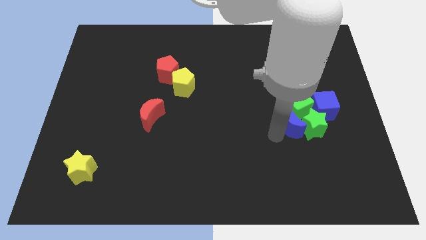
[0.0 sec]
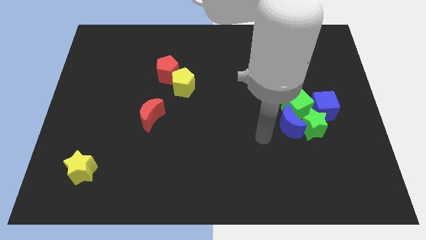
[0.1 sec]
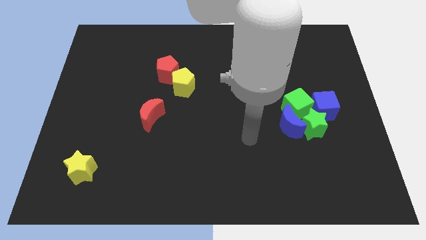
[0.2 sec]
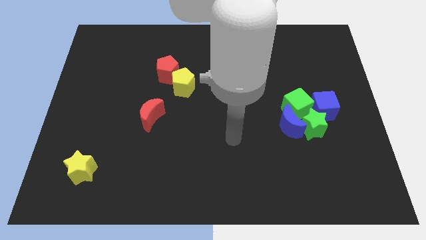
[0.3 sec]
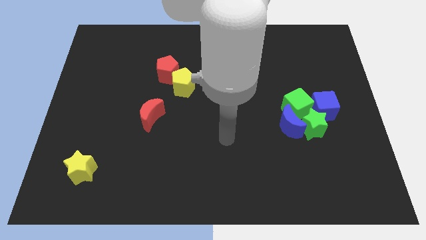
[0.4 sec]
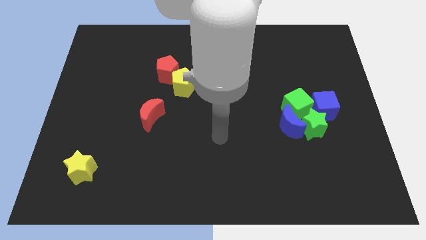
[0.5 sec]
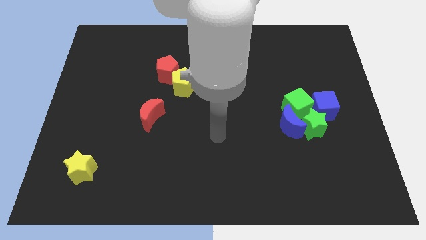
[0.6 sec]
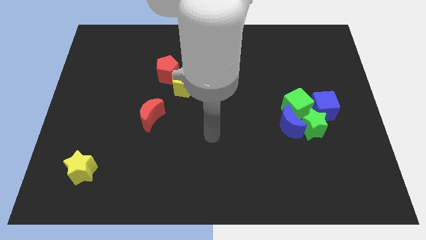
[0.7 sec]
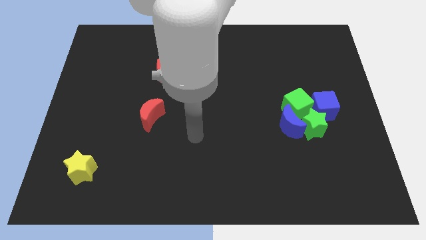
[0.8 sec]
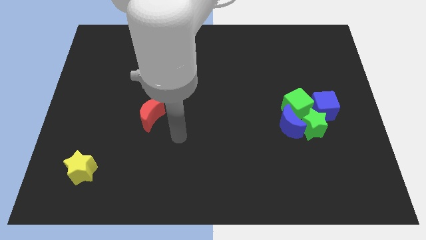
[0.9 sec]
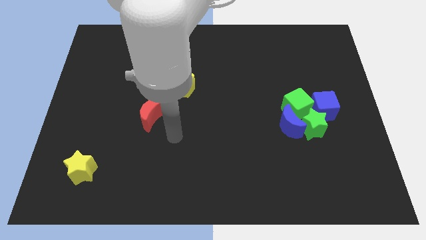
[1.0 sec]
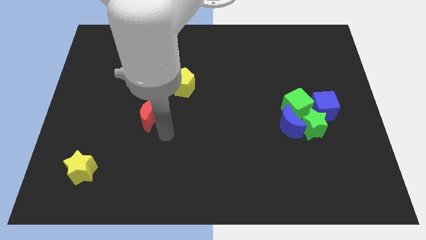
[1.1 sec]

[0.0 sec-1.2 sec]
move your arm towards the left side of the board

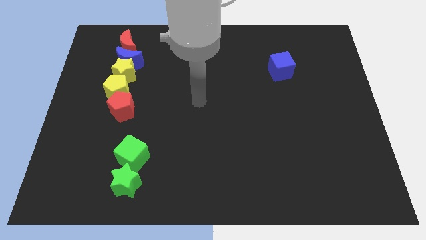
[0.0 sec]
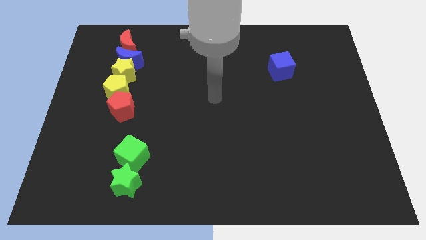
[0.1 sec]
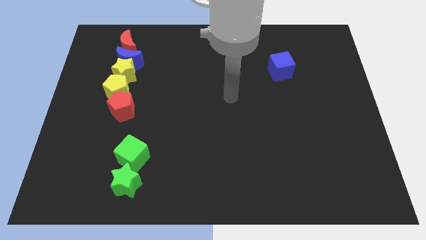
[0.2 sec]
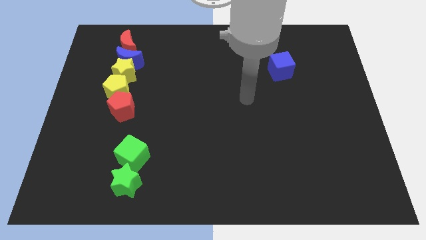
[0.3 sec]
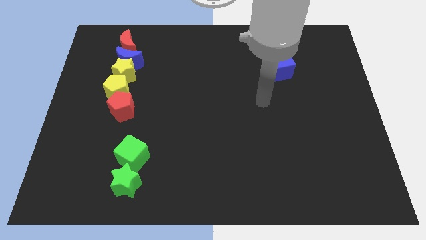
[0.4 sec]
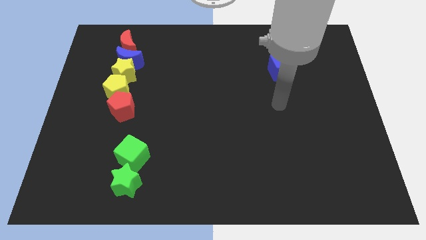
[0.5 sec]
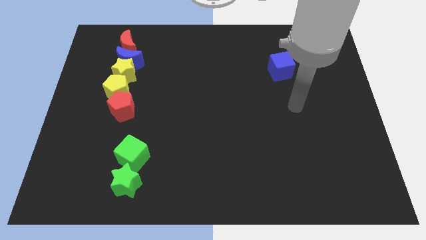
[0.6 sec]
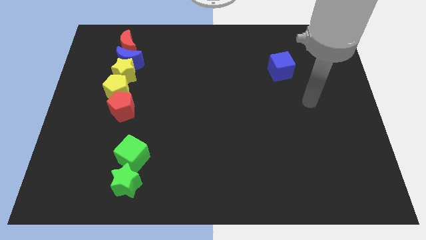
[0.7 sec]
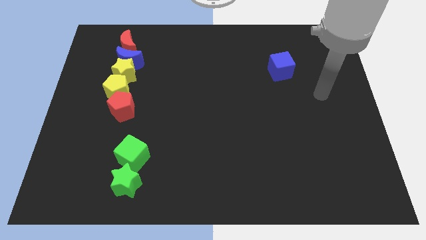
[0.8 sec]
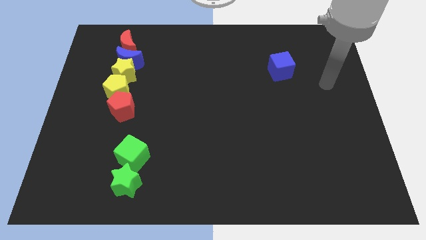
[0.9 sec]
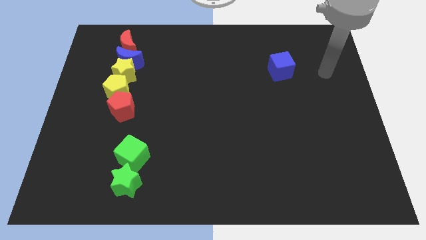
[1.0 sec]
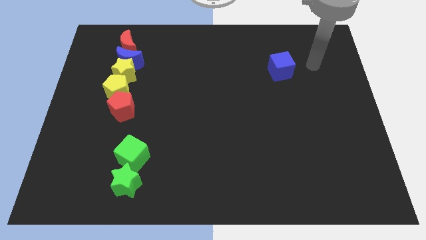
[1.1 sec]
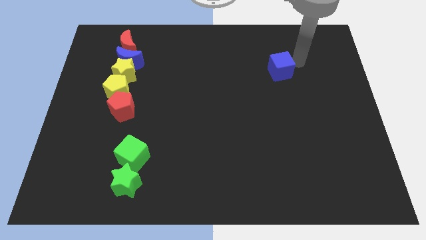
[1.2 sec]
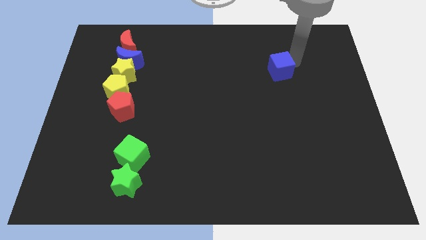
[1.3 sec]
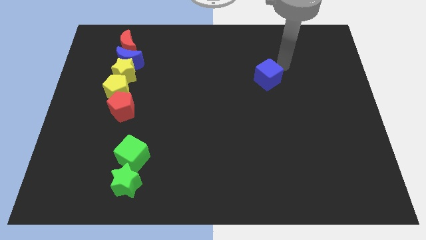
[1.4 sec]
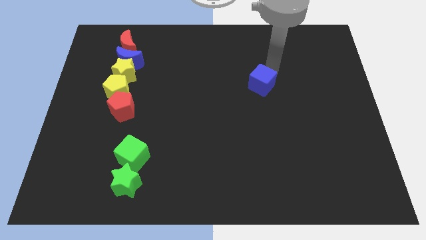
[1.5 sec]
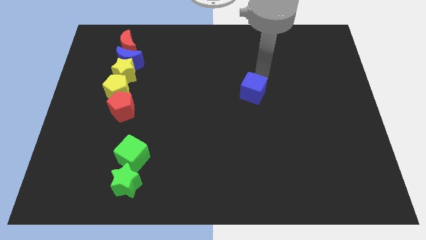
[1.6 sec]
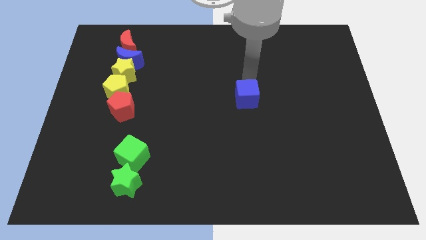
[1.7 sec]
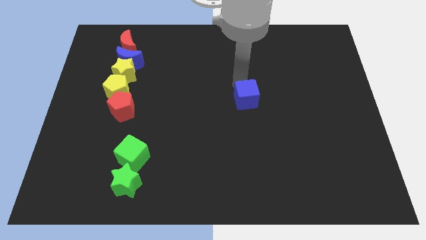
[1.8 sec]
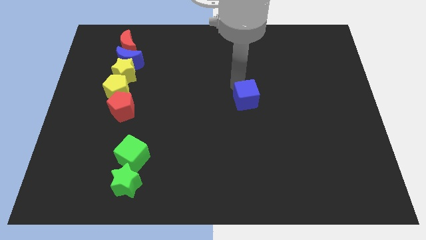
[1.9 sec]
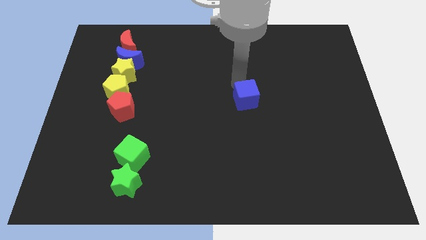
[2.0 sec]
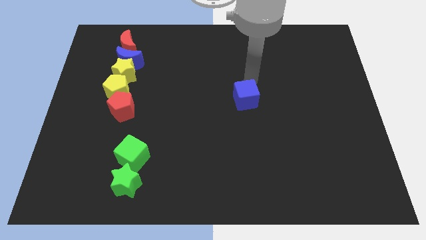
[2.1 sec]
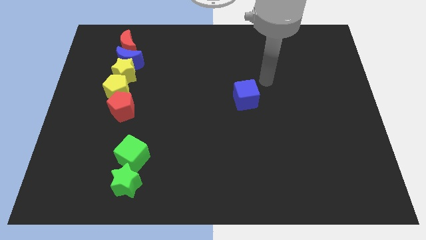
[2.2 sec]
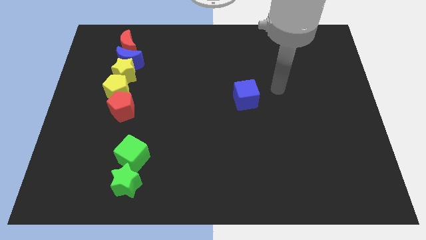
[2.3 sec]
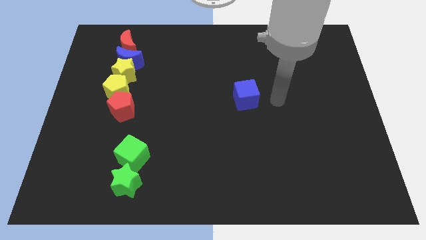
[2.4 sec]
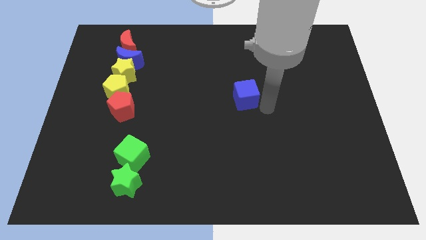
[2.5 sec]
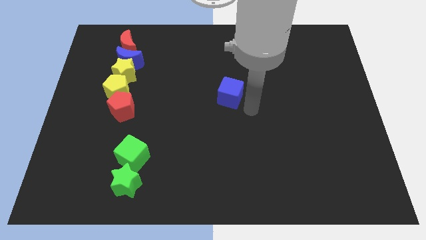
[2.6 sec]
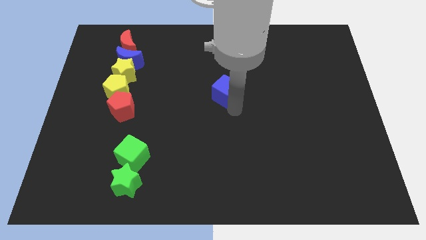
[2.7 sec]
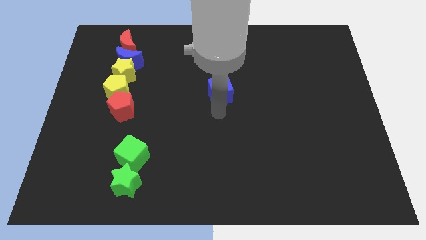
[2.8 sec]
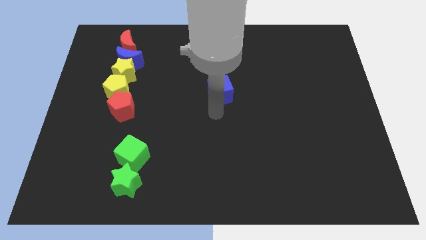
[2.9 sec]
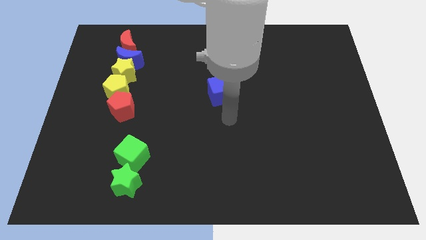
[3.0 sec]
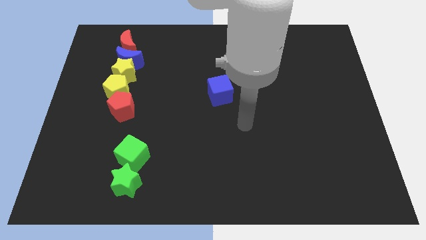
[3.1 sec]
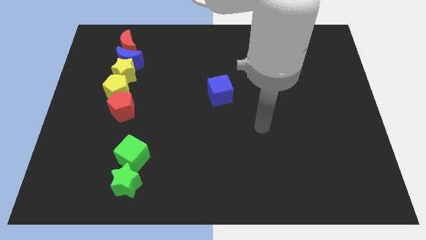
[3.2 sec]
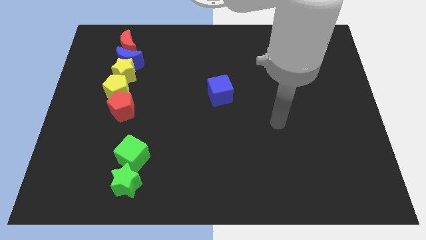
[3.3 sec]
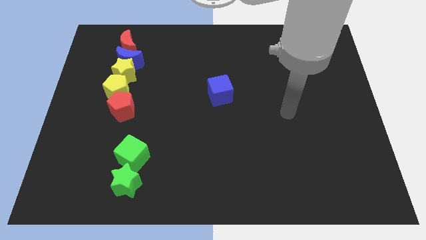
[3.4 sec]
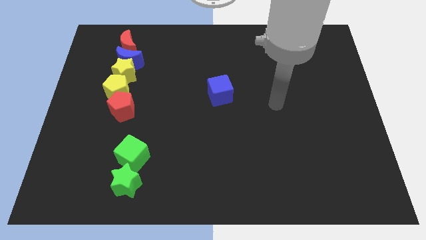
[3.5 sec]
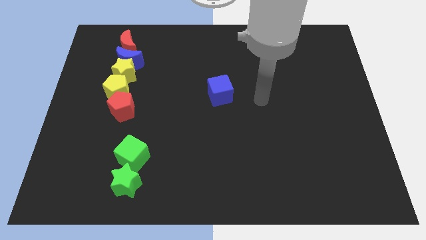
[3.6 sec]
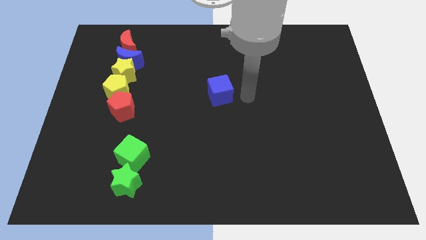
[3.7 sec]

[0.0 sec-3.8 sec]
place the blue cube to the center

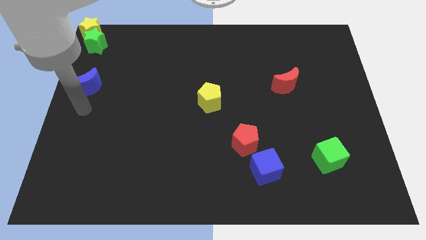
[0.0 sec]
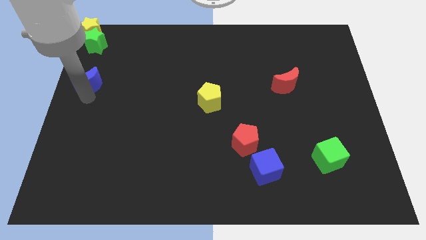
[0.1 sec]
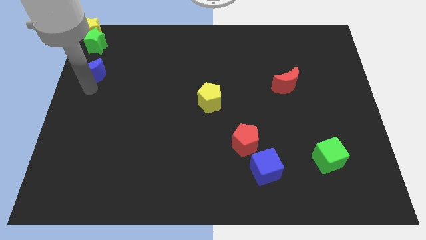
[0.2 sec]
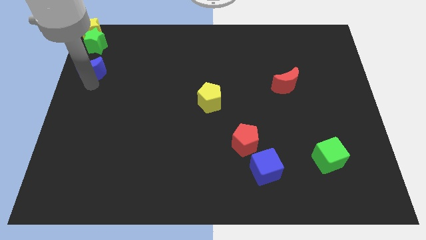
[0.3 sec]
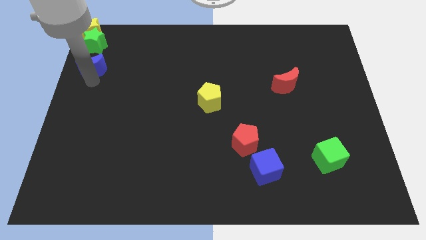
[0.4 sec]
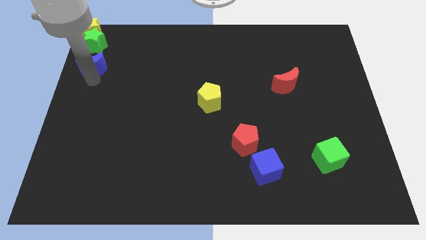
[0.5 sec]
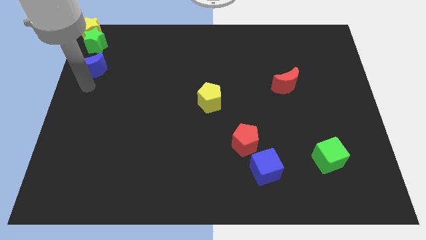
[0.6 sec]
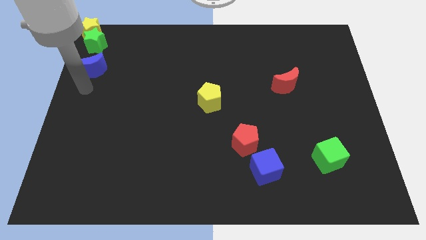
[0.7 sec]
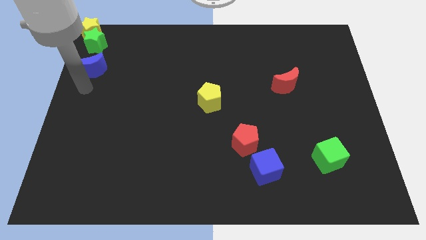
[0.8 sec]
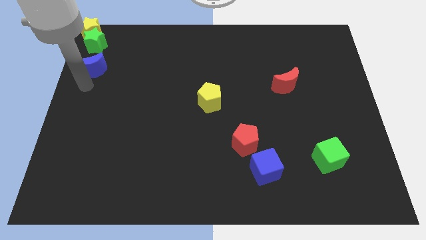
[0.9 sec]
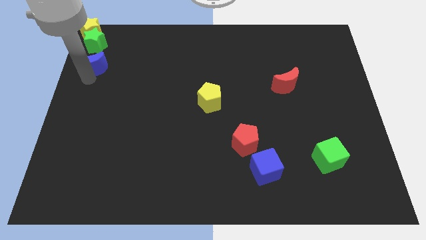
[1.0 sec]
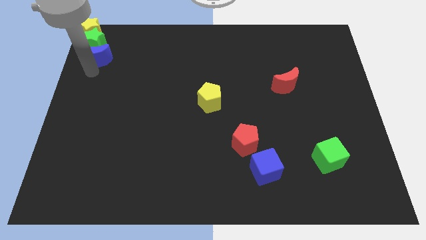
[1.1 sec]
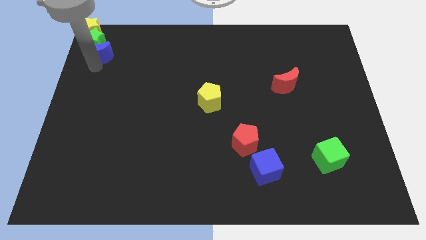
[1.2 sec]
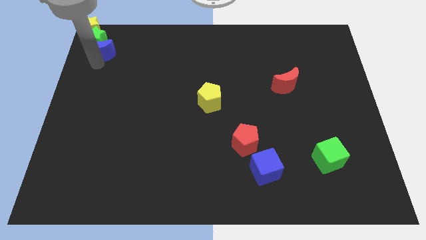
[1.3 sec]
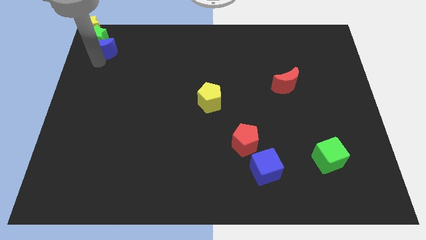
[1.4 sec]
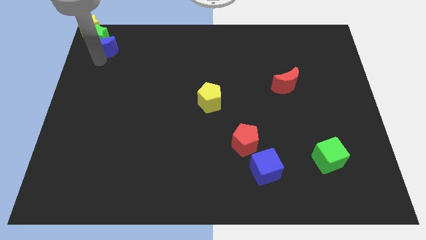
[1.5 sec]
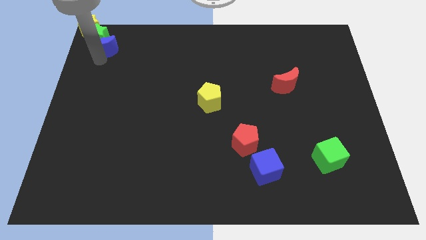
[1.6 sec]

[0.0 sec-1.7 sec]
push the blue crescent into the bottom side of the green star

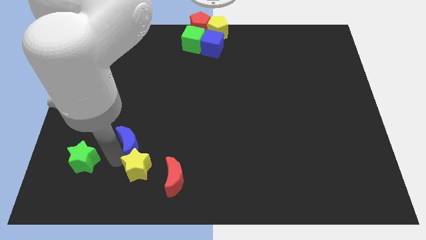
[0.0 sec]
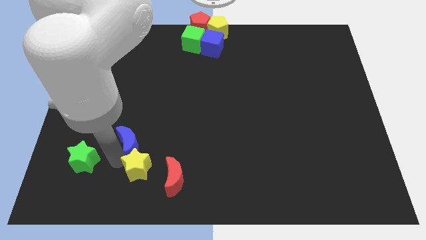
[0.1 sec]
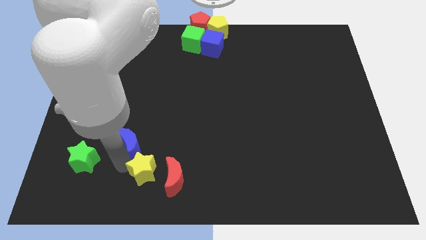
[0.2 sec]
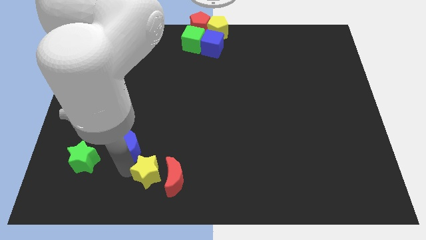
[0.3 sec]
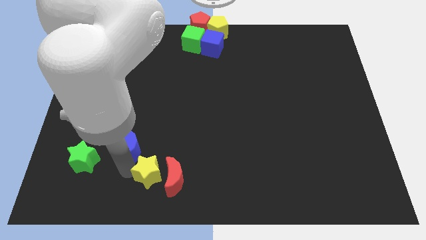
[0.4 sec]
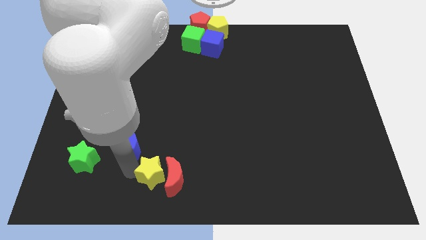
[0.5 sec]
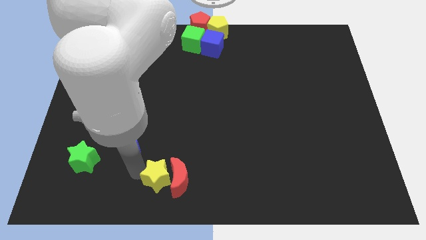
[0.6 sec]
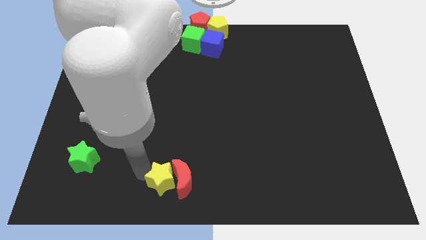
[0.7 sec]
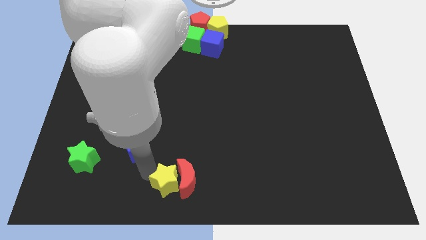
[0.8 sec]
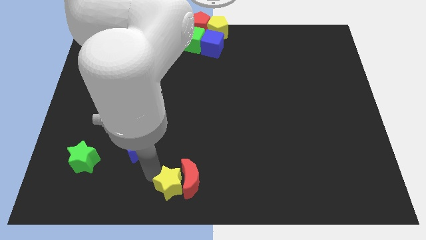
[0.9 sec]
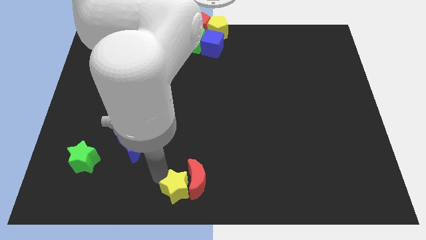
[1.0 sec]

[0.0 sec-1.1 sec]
slide the yellow star into the red crescent

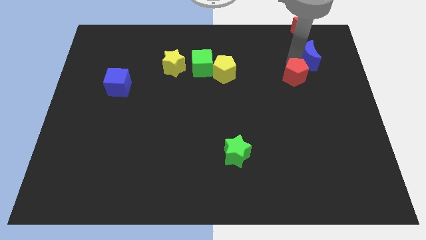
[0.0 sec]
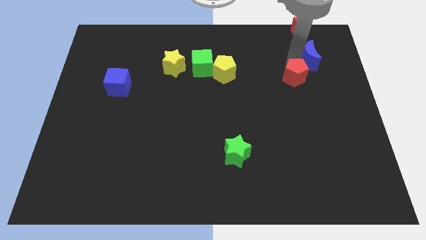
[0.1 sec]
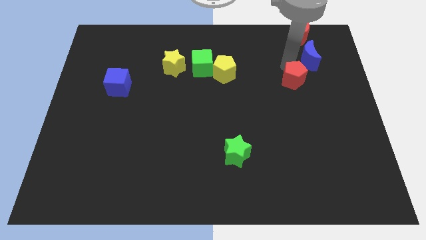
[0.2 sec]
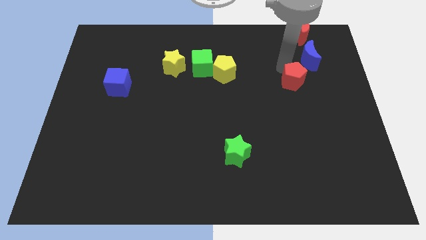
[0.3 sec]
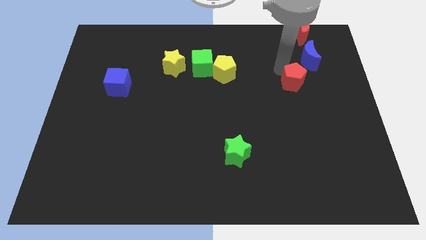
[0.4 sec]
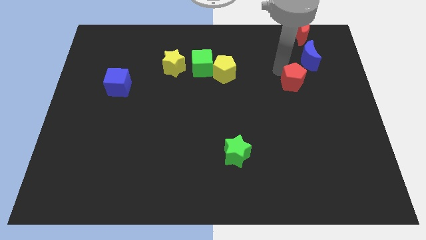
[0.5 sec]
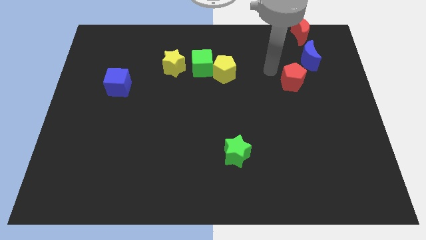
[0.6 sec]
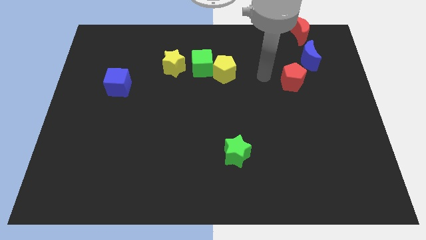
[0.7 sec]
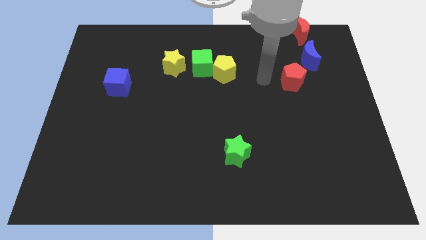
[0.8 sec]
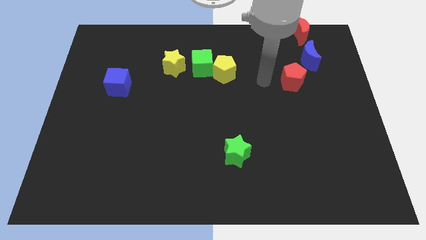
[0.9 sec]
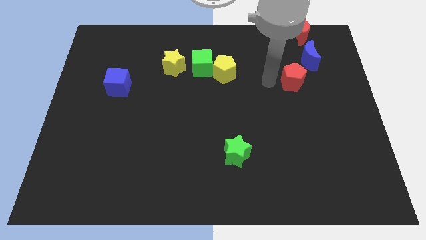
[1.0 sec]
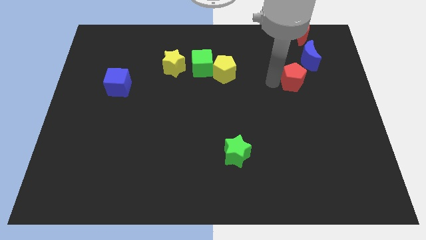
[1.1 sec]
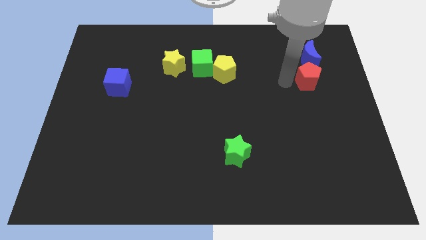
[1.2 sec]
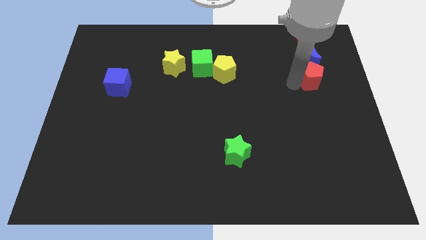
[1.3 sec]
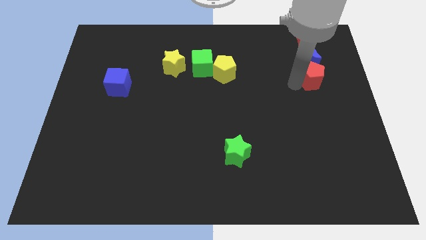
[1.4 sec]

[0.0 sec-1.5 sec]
place the red pentagon below the blue crescent
